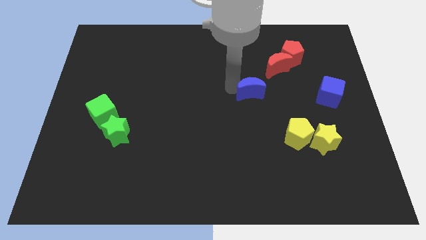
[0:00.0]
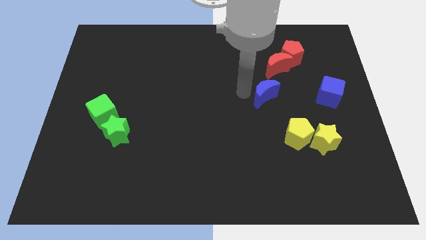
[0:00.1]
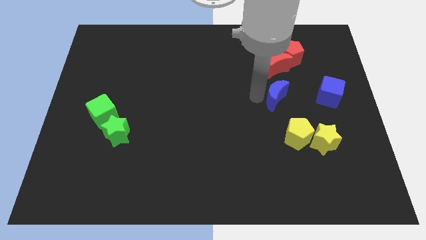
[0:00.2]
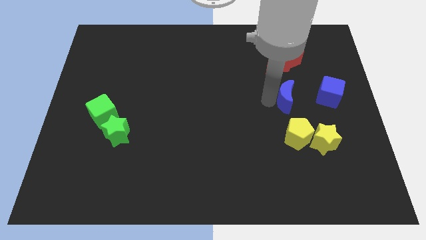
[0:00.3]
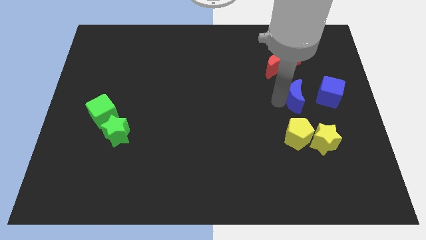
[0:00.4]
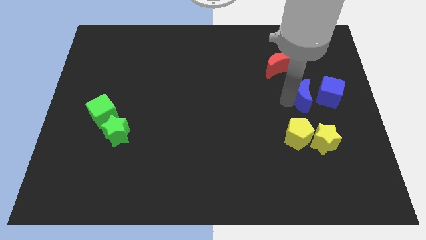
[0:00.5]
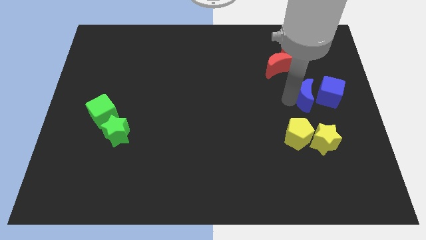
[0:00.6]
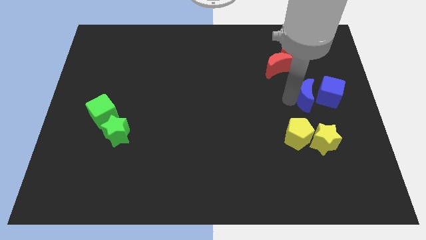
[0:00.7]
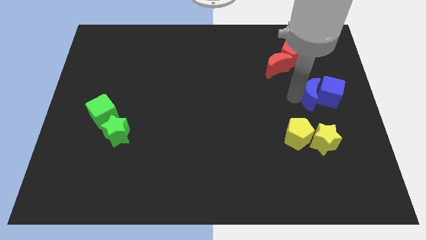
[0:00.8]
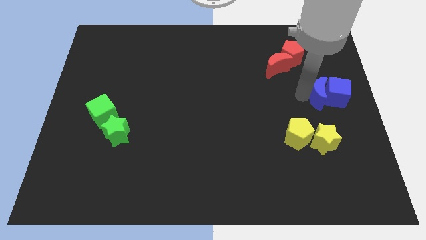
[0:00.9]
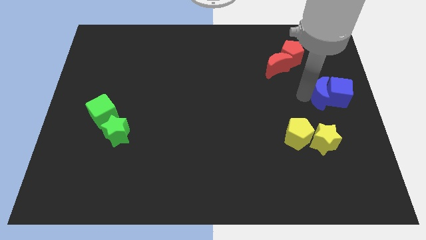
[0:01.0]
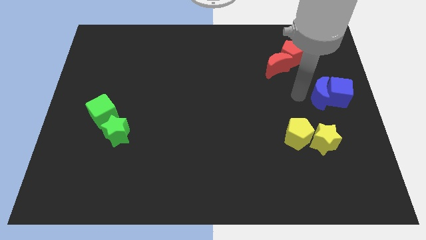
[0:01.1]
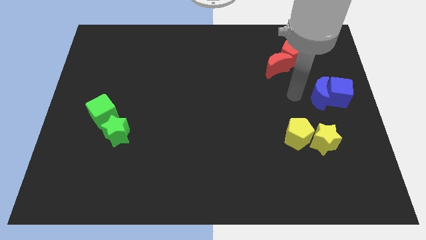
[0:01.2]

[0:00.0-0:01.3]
group up the blue blocks at the center right of the board

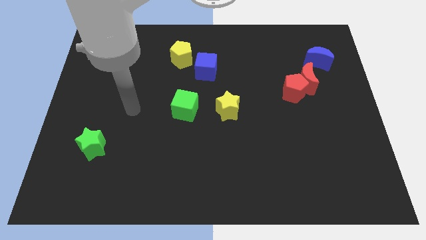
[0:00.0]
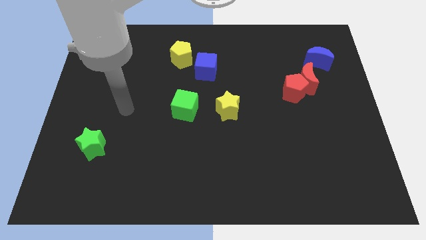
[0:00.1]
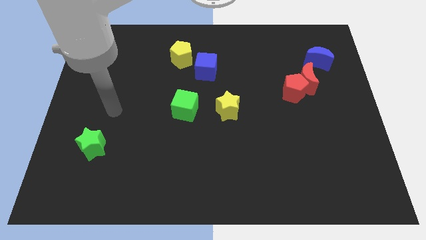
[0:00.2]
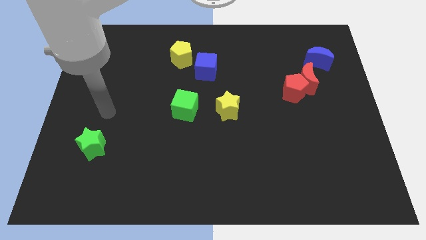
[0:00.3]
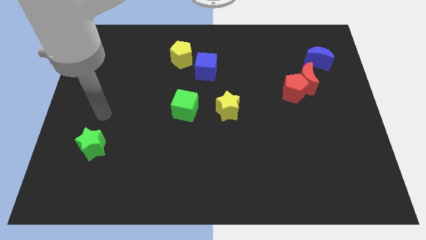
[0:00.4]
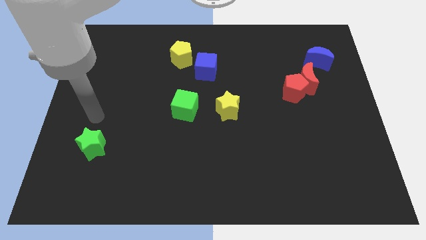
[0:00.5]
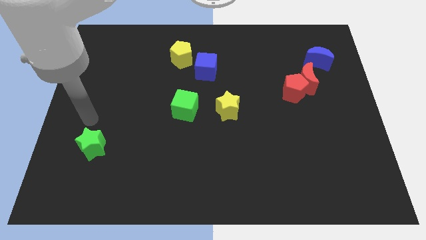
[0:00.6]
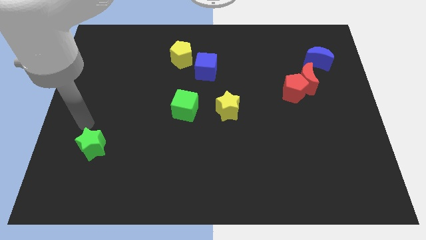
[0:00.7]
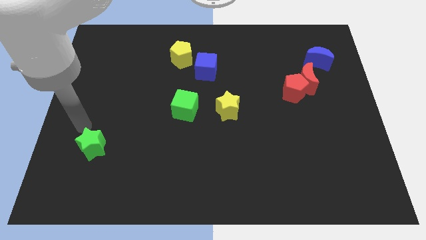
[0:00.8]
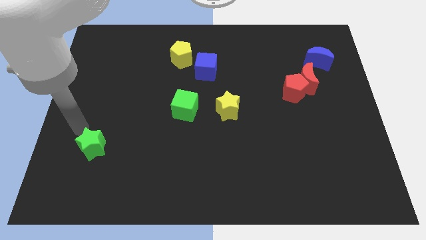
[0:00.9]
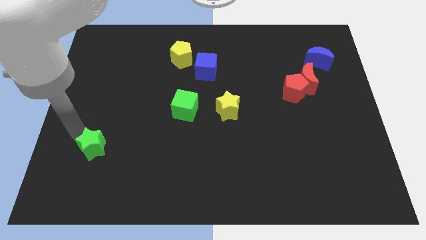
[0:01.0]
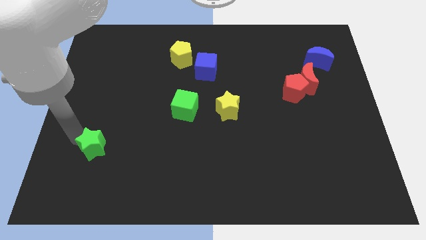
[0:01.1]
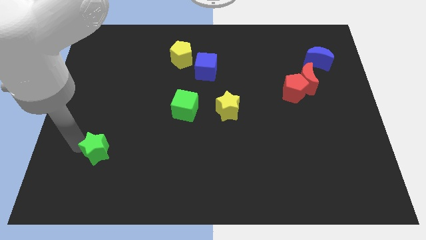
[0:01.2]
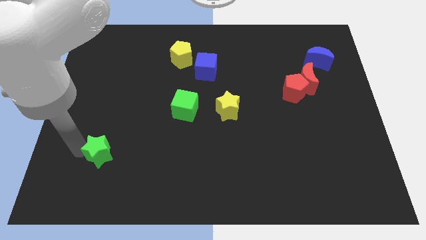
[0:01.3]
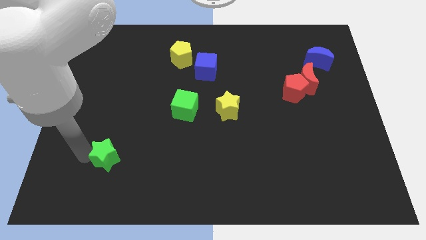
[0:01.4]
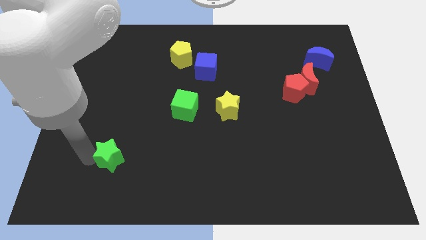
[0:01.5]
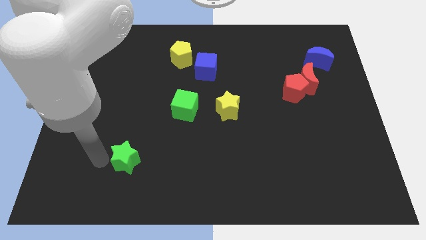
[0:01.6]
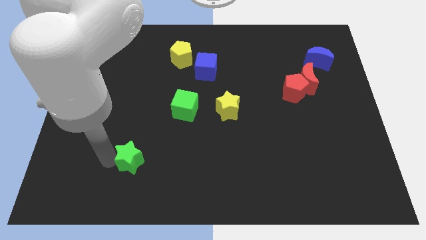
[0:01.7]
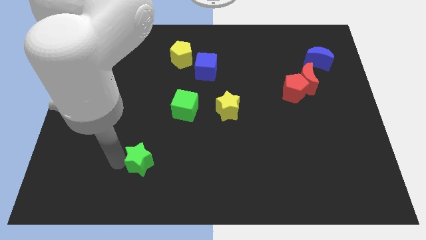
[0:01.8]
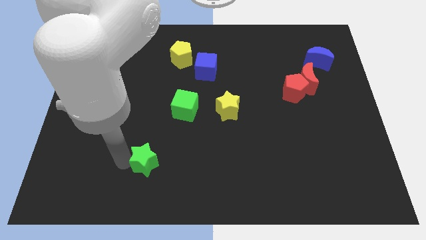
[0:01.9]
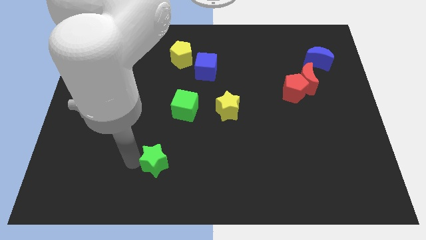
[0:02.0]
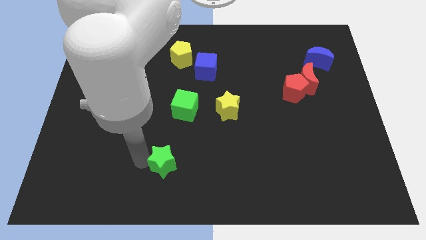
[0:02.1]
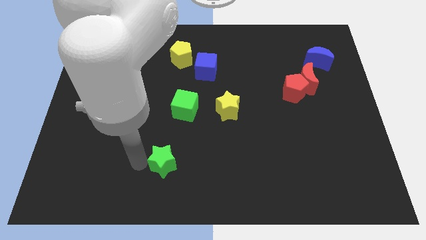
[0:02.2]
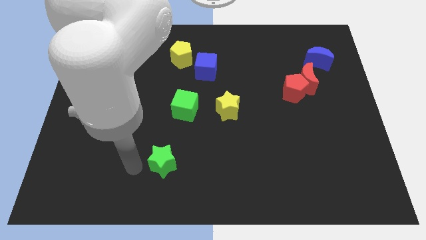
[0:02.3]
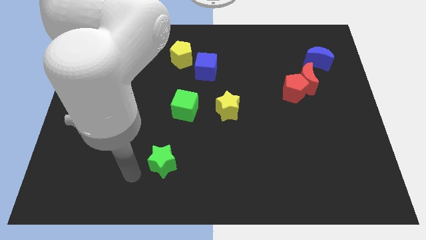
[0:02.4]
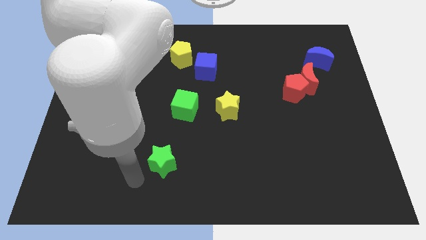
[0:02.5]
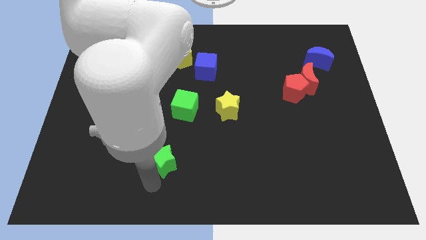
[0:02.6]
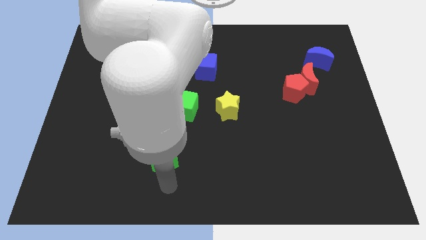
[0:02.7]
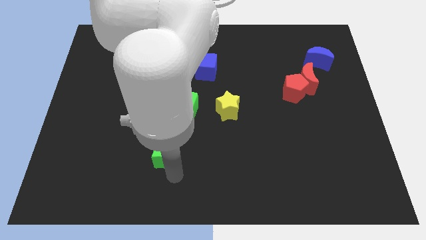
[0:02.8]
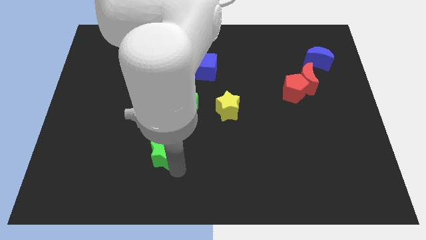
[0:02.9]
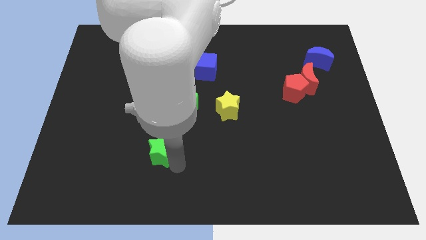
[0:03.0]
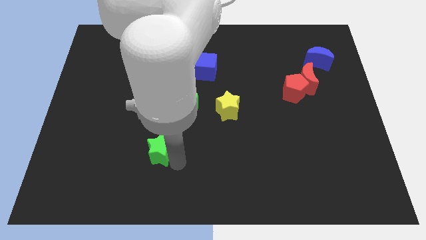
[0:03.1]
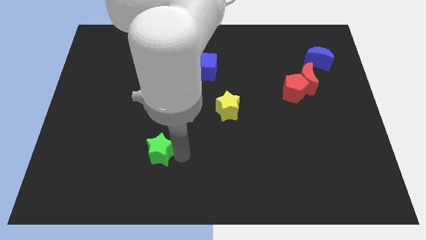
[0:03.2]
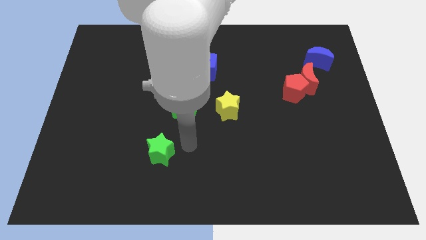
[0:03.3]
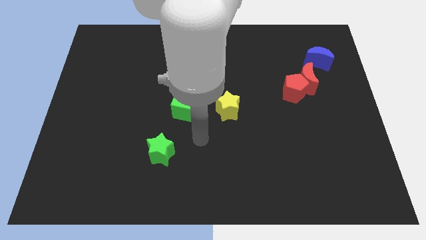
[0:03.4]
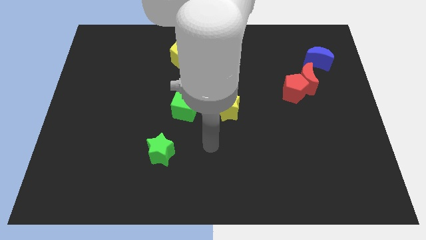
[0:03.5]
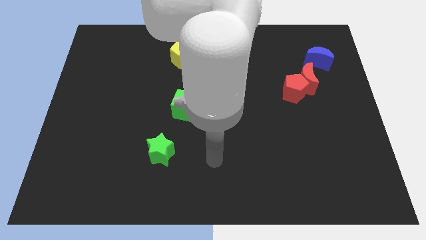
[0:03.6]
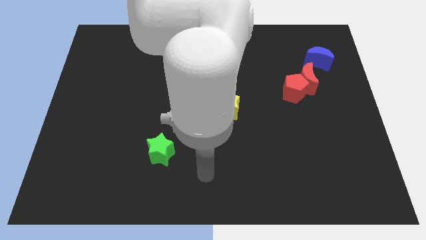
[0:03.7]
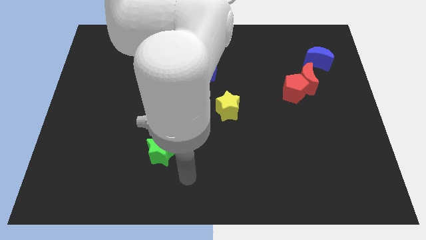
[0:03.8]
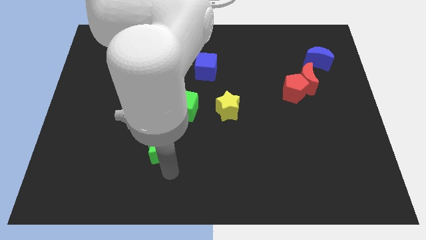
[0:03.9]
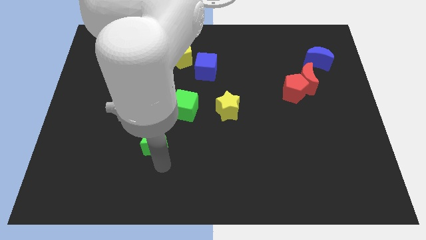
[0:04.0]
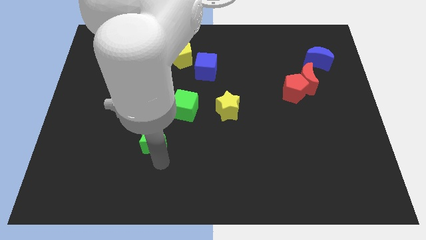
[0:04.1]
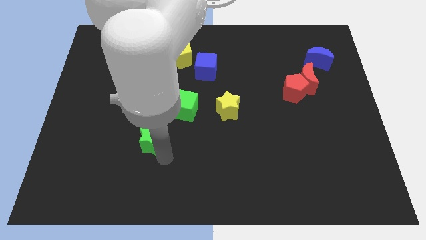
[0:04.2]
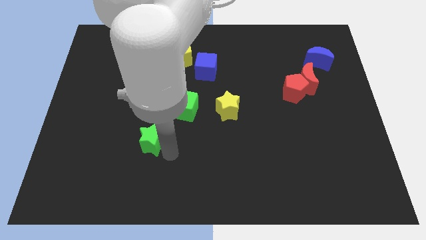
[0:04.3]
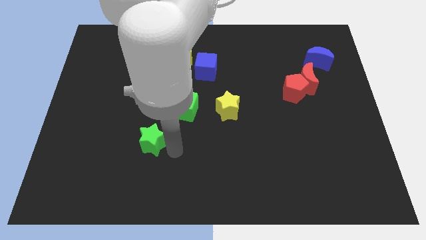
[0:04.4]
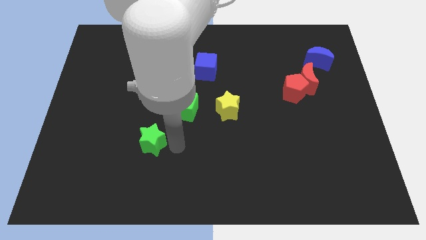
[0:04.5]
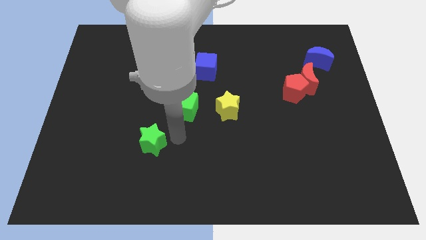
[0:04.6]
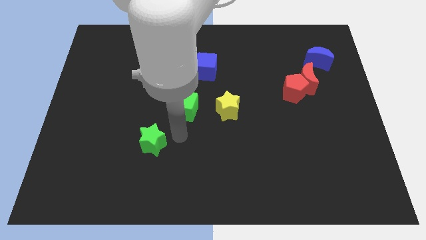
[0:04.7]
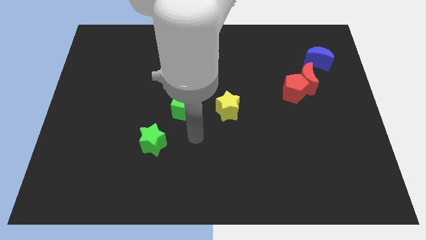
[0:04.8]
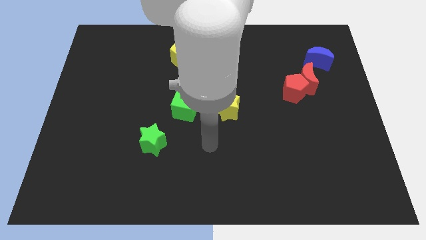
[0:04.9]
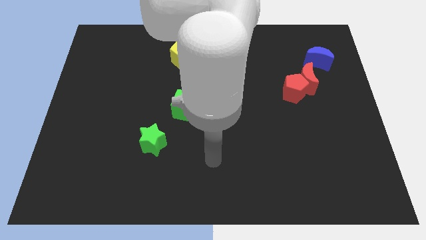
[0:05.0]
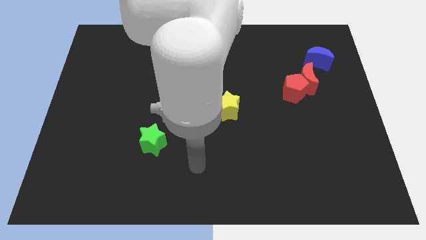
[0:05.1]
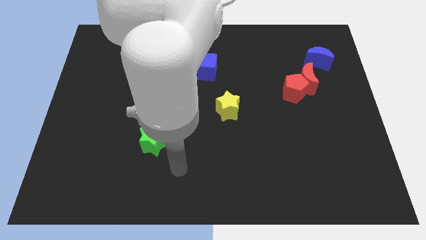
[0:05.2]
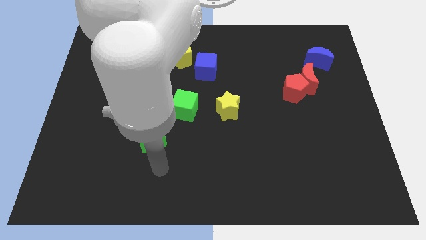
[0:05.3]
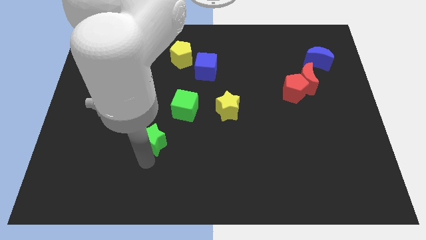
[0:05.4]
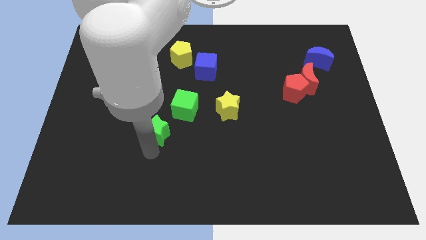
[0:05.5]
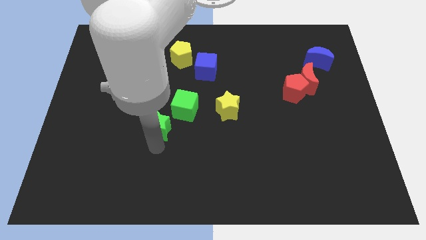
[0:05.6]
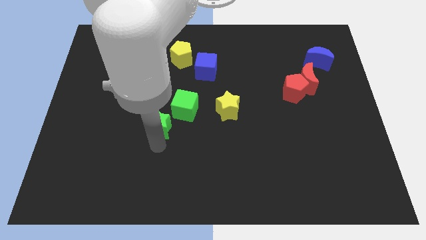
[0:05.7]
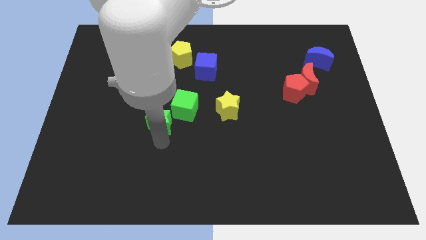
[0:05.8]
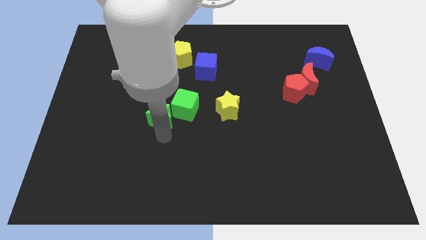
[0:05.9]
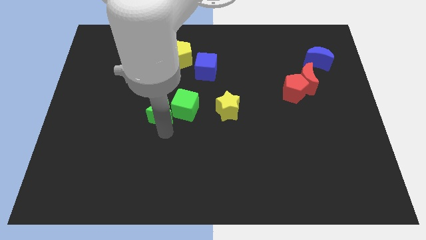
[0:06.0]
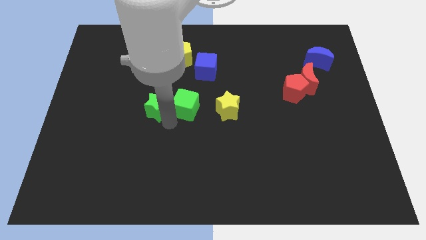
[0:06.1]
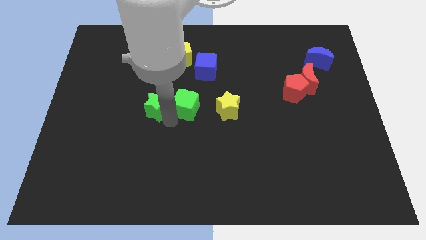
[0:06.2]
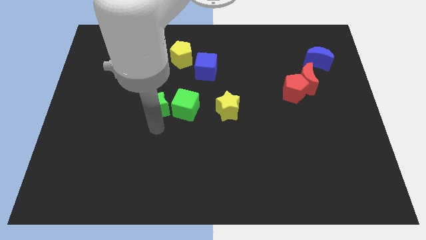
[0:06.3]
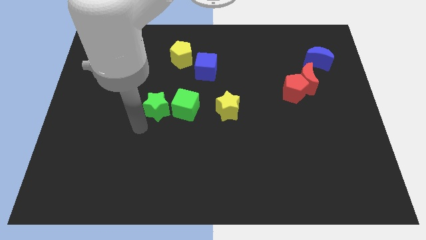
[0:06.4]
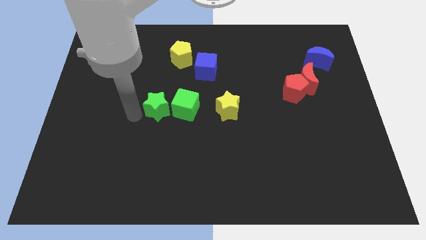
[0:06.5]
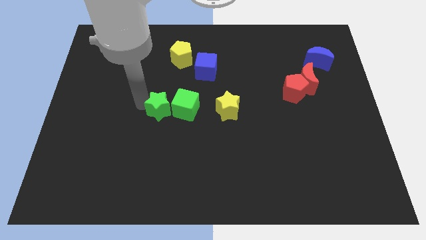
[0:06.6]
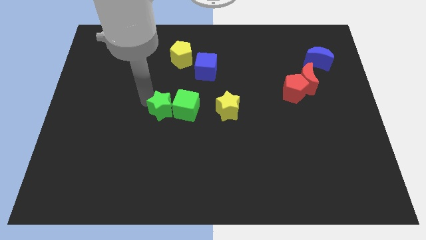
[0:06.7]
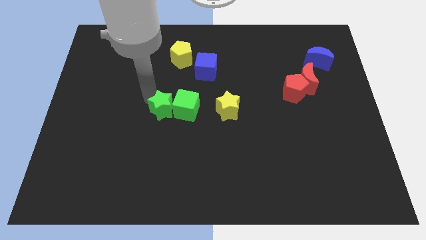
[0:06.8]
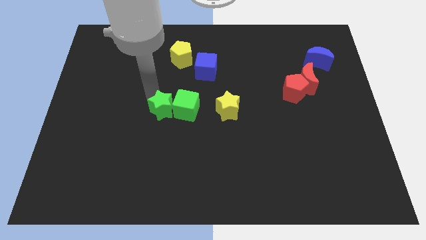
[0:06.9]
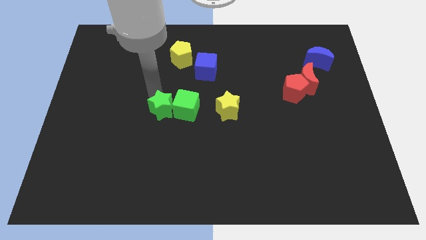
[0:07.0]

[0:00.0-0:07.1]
place green star to the left of green cube

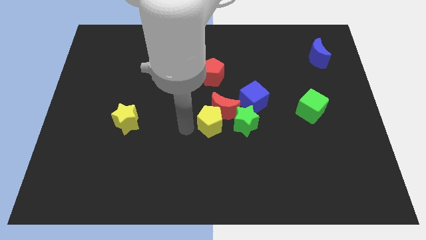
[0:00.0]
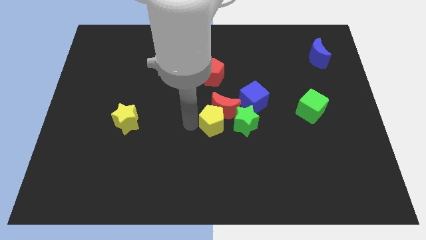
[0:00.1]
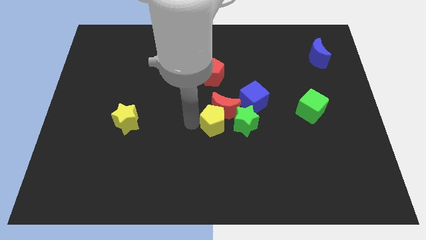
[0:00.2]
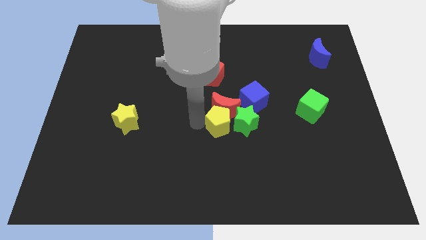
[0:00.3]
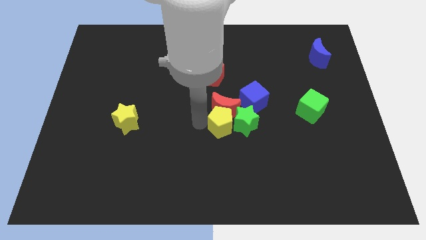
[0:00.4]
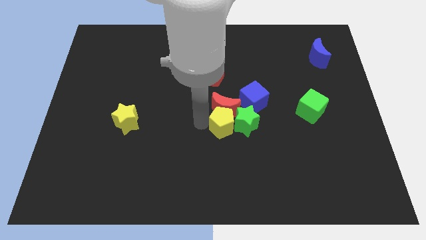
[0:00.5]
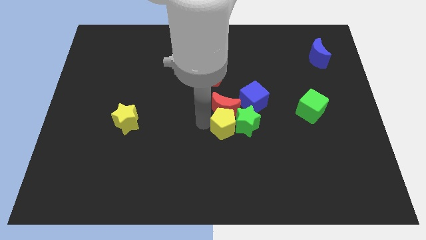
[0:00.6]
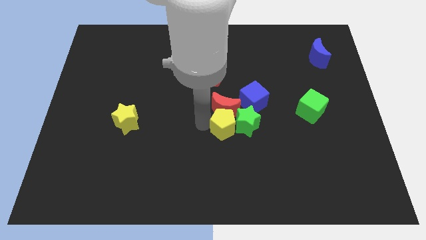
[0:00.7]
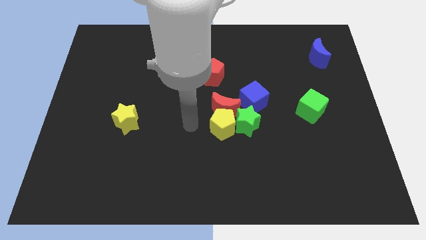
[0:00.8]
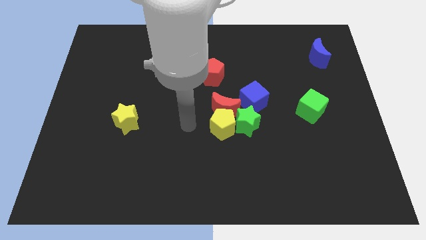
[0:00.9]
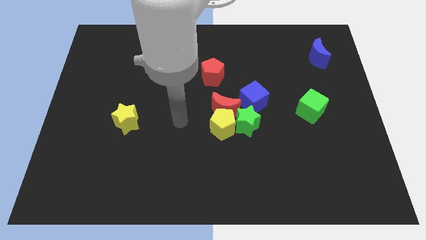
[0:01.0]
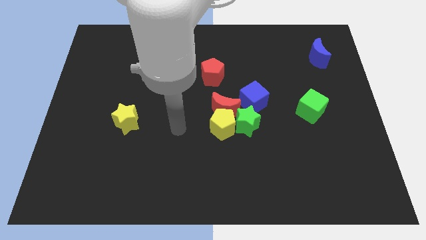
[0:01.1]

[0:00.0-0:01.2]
make the yellow pentagon to touch the left side of the green star
